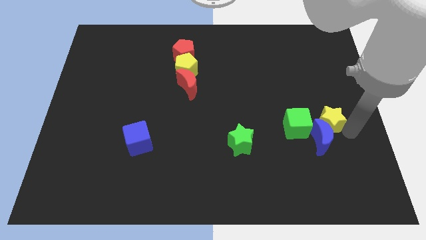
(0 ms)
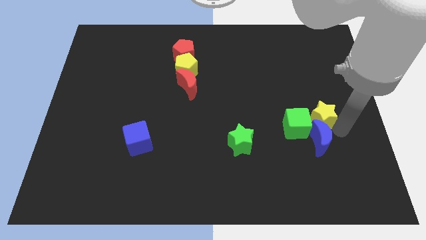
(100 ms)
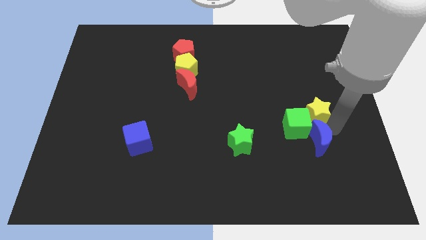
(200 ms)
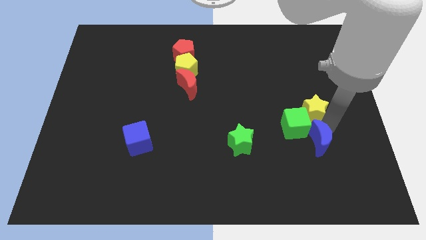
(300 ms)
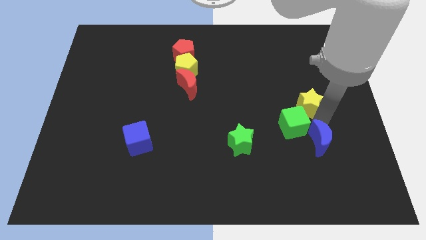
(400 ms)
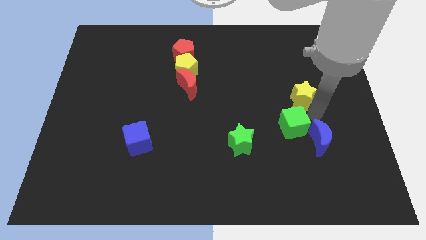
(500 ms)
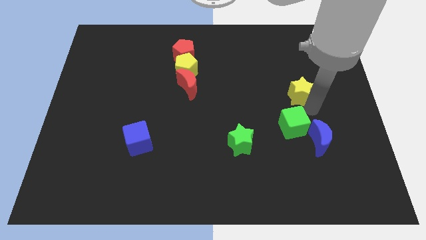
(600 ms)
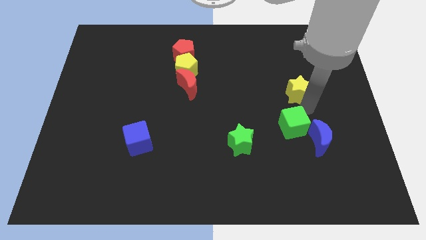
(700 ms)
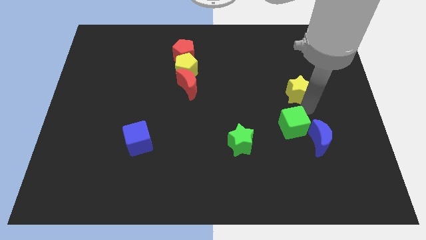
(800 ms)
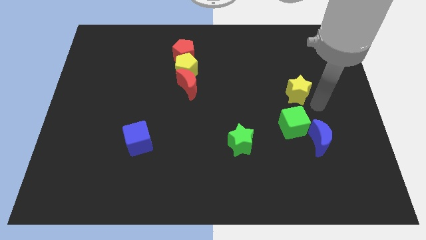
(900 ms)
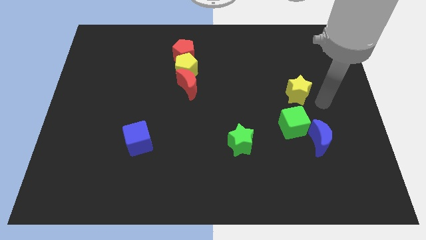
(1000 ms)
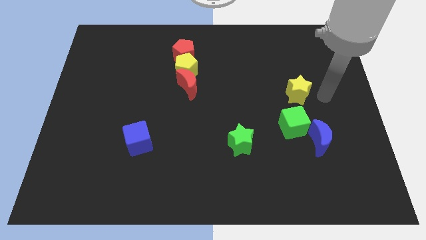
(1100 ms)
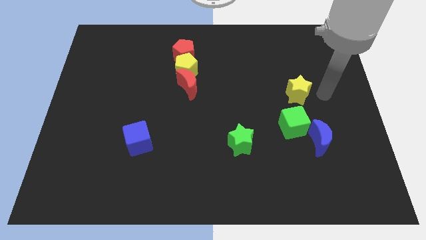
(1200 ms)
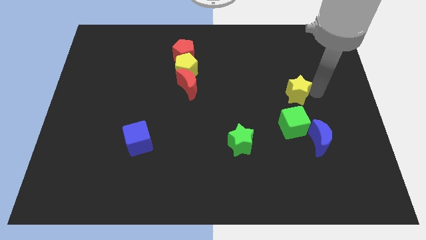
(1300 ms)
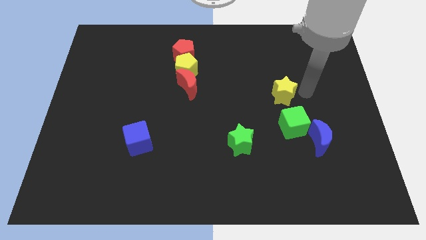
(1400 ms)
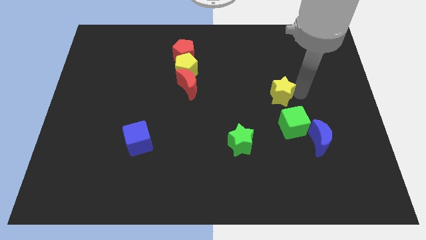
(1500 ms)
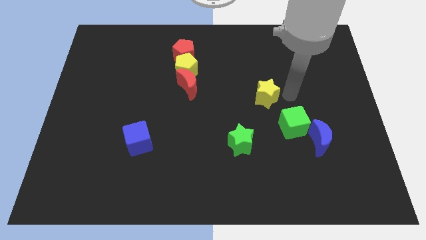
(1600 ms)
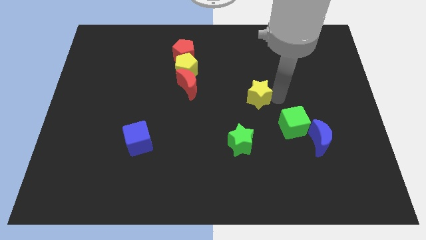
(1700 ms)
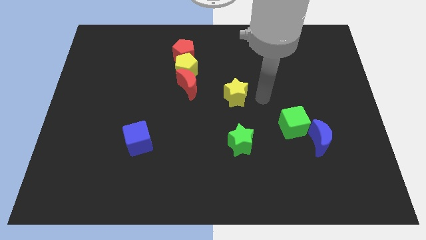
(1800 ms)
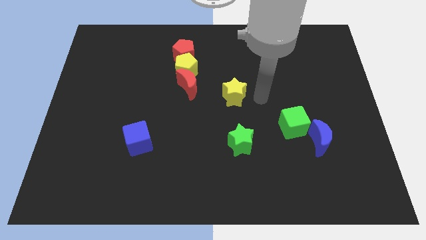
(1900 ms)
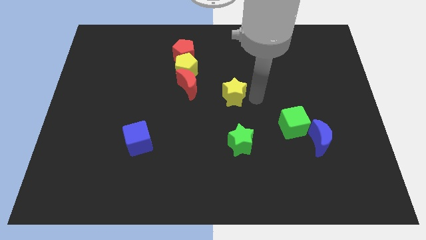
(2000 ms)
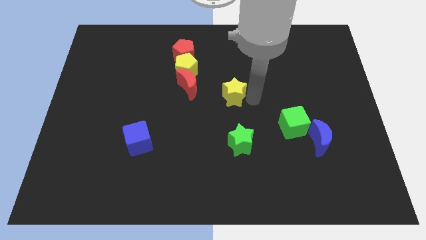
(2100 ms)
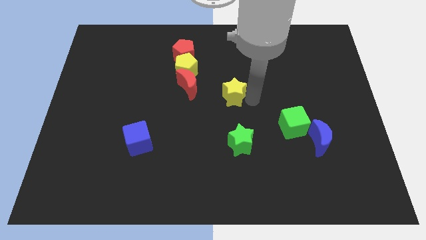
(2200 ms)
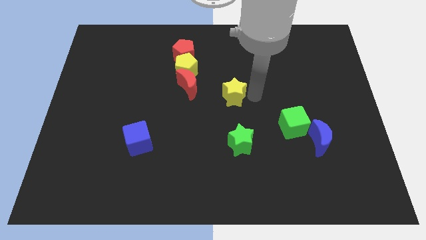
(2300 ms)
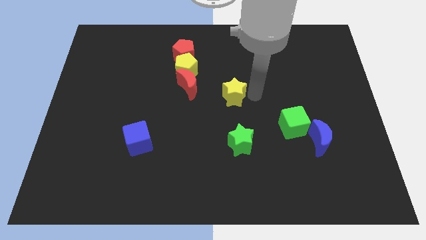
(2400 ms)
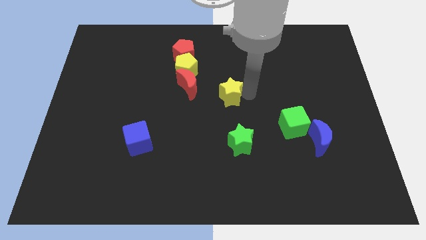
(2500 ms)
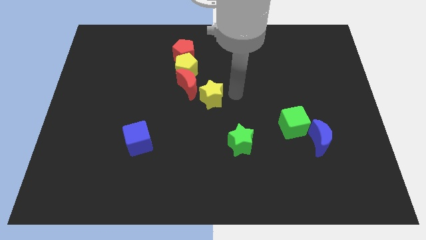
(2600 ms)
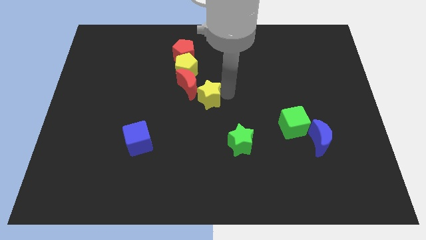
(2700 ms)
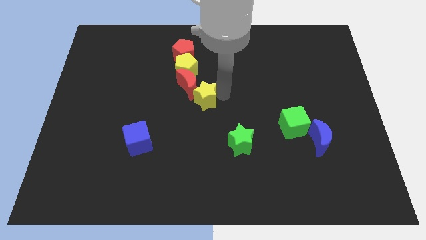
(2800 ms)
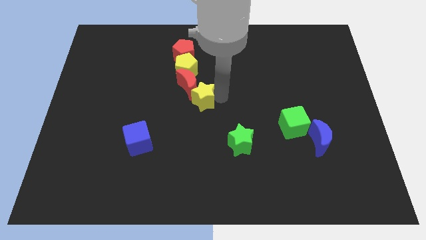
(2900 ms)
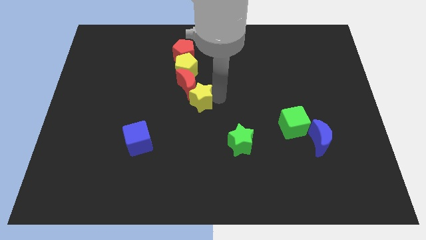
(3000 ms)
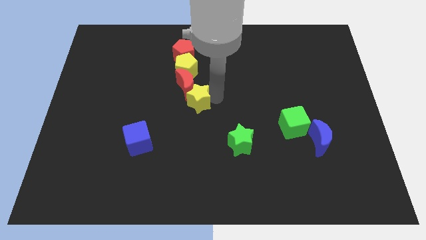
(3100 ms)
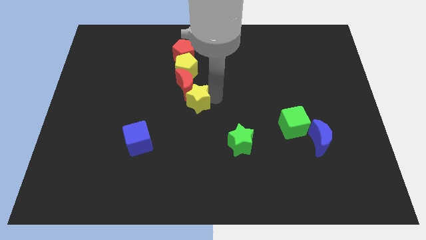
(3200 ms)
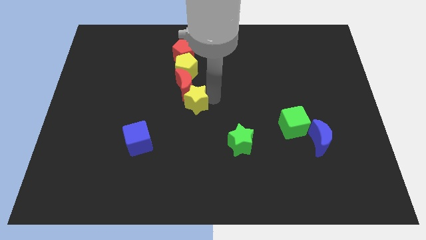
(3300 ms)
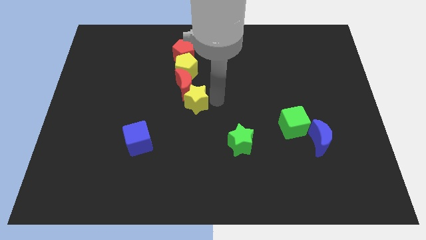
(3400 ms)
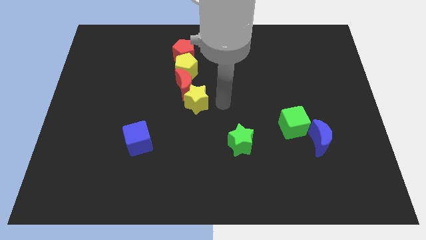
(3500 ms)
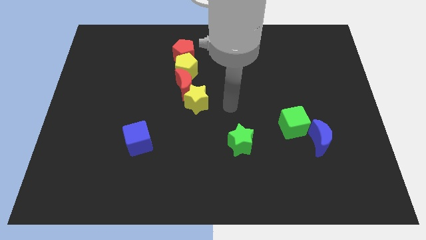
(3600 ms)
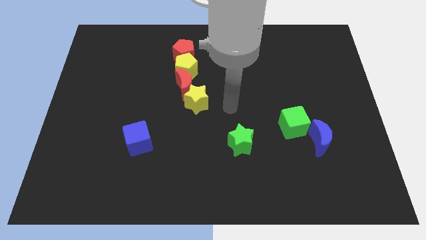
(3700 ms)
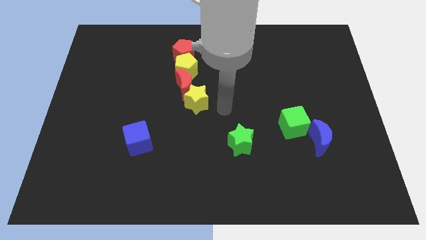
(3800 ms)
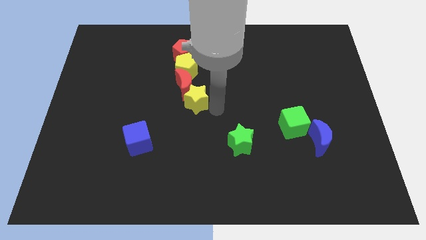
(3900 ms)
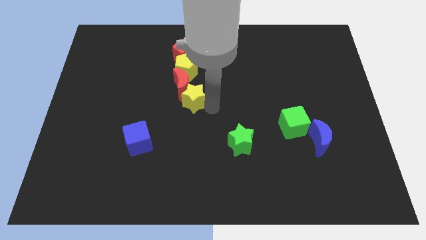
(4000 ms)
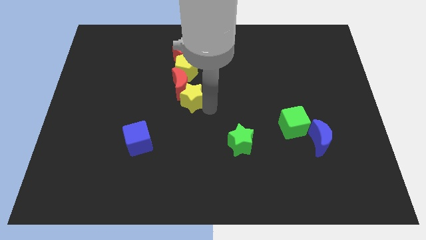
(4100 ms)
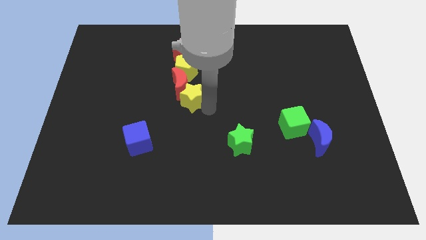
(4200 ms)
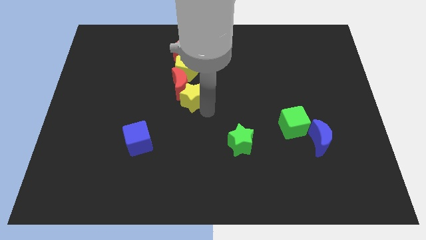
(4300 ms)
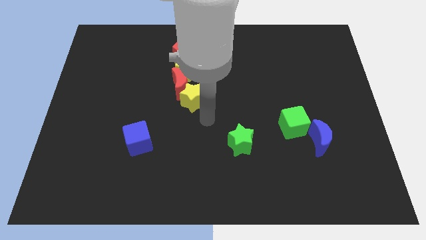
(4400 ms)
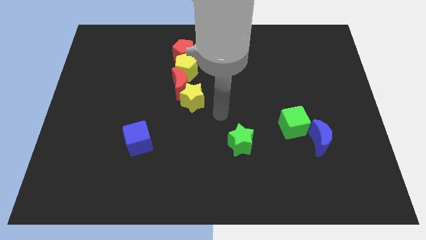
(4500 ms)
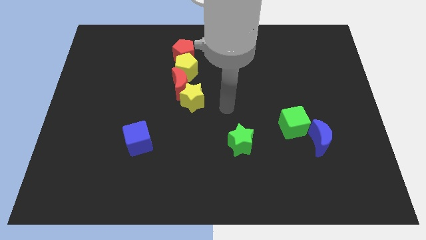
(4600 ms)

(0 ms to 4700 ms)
separate the yellow star from the blue moon and green cube

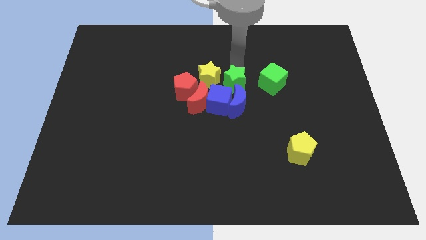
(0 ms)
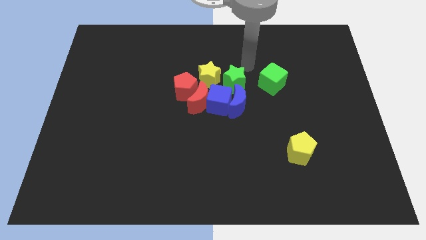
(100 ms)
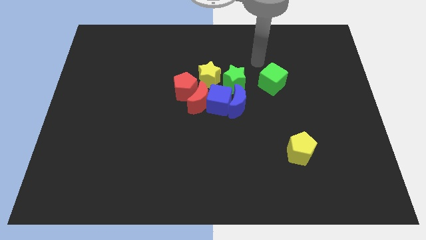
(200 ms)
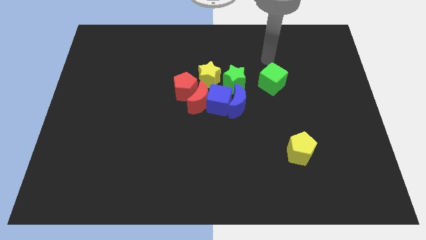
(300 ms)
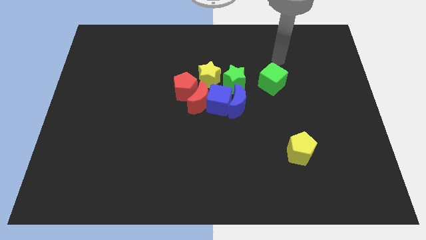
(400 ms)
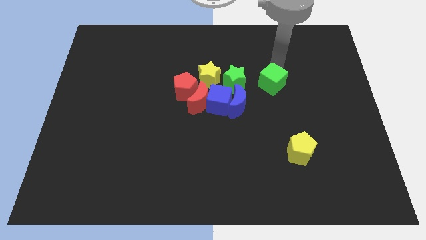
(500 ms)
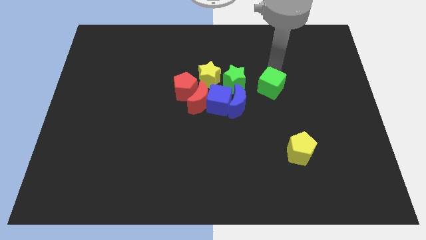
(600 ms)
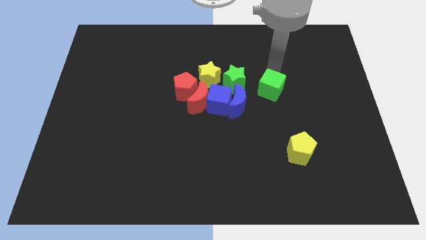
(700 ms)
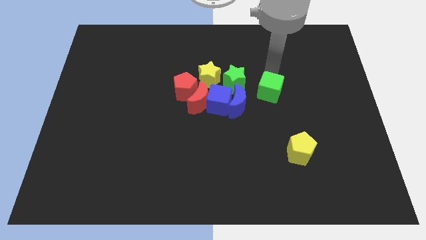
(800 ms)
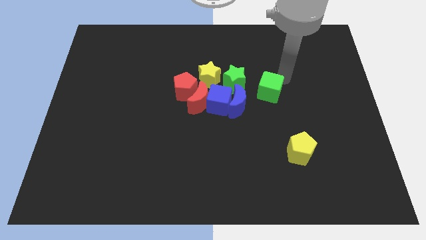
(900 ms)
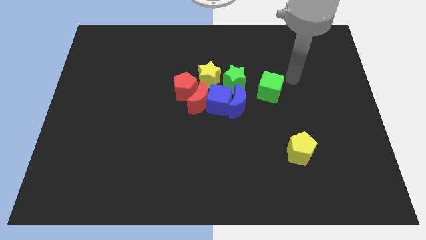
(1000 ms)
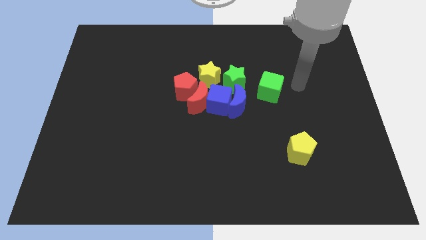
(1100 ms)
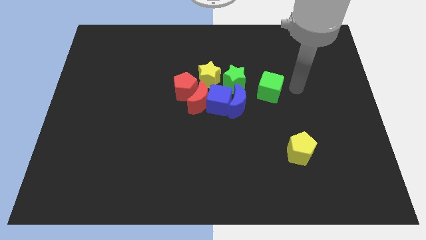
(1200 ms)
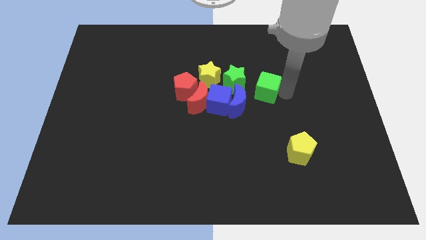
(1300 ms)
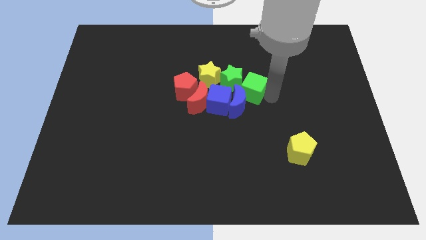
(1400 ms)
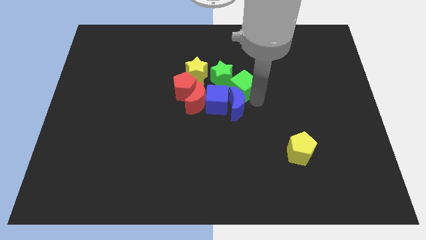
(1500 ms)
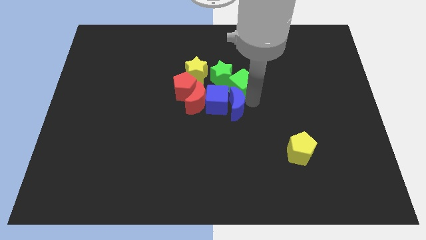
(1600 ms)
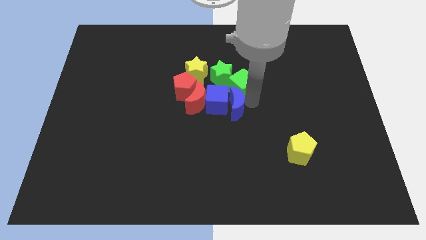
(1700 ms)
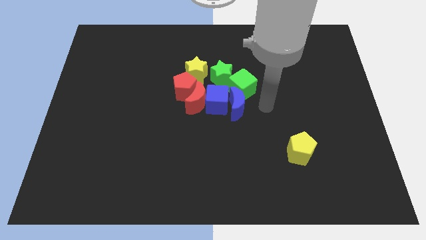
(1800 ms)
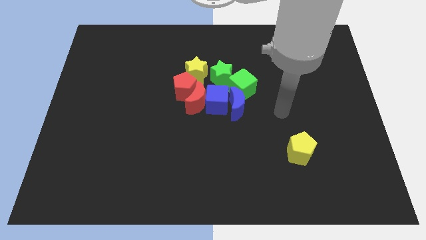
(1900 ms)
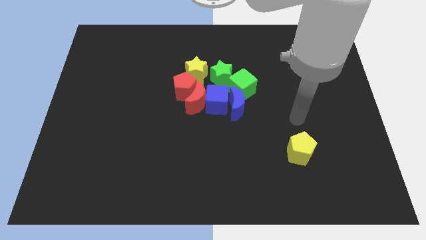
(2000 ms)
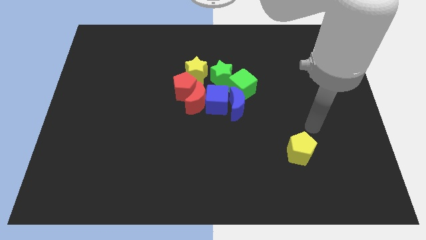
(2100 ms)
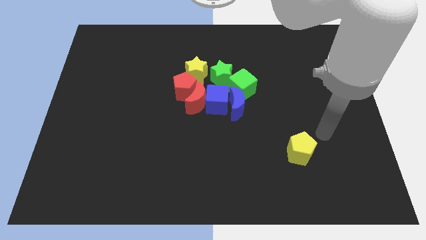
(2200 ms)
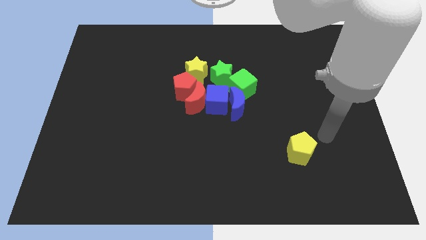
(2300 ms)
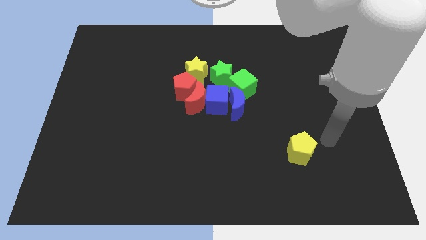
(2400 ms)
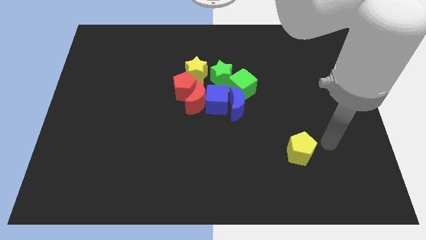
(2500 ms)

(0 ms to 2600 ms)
push the green cube into the green star

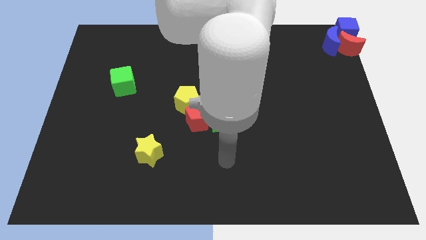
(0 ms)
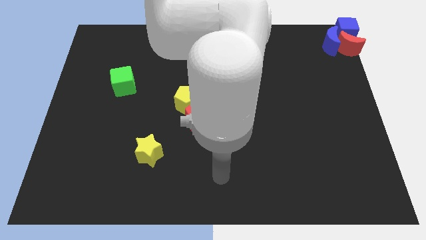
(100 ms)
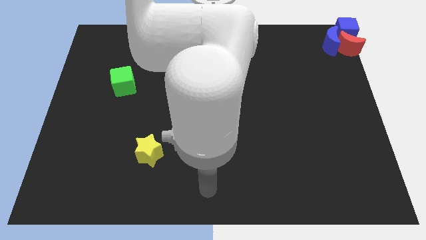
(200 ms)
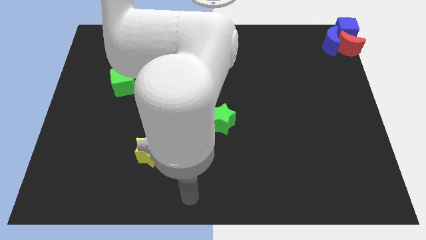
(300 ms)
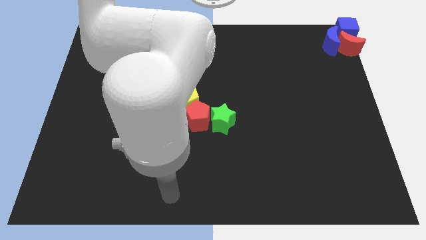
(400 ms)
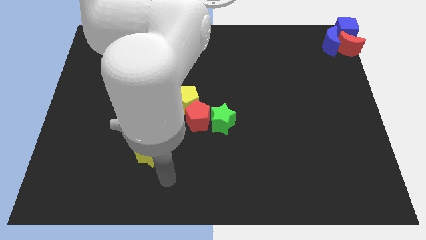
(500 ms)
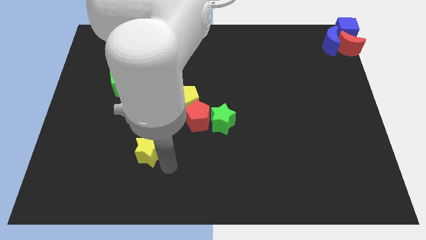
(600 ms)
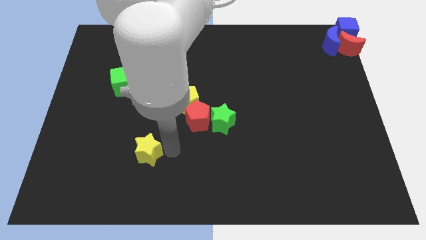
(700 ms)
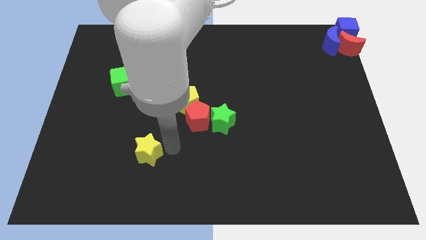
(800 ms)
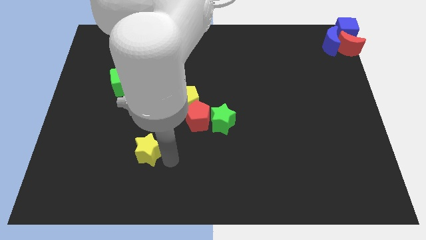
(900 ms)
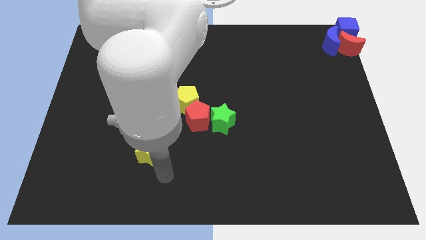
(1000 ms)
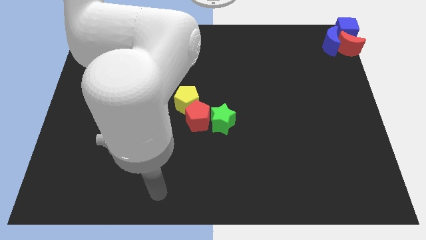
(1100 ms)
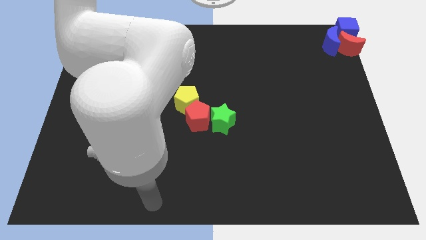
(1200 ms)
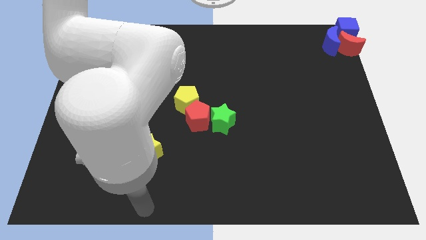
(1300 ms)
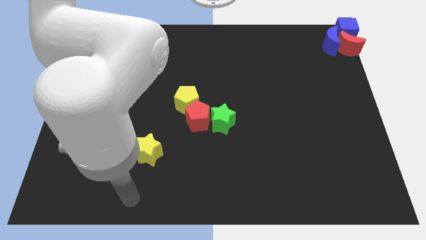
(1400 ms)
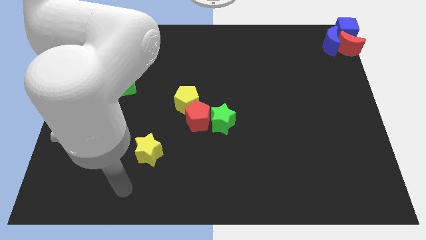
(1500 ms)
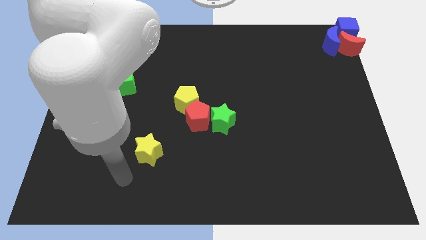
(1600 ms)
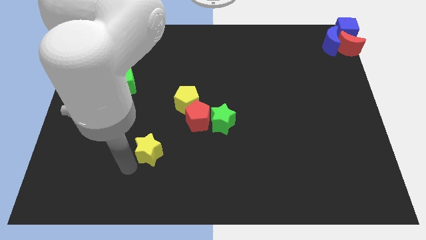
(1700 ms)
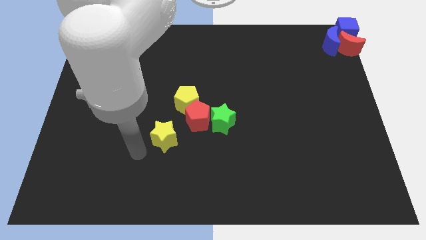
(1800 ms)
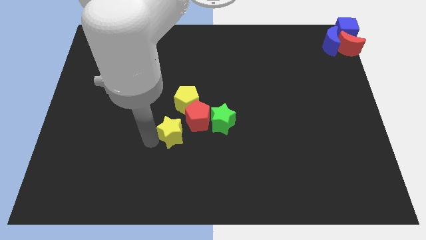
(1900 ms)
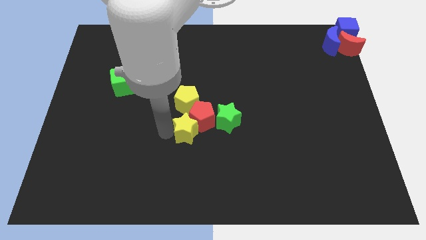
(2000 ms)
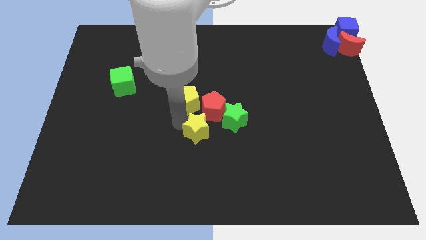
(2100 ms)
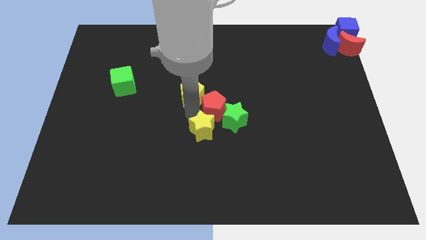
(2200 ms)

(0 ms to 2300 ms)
push the yellow star below into the red pentagon
